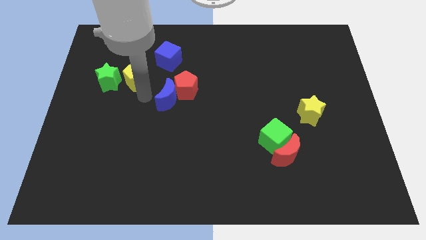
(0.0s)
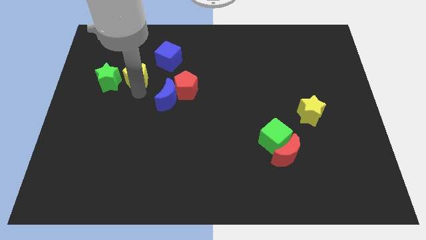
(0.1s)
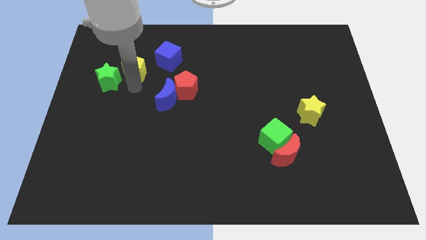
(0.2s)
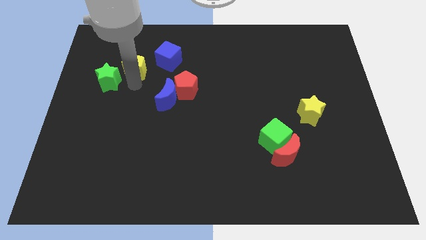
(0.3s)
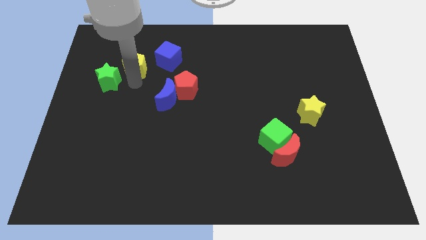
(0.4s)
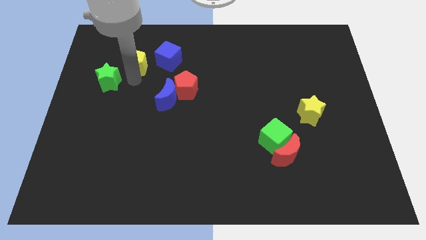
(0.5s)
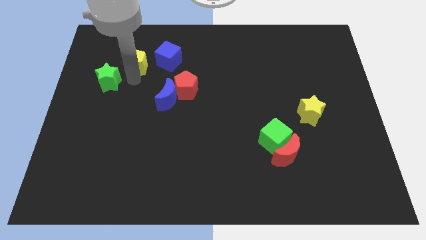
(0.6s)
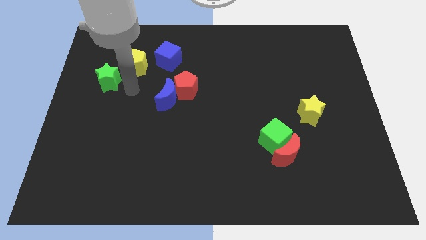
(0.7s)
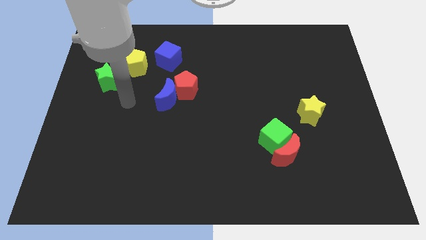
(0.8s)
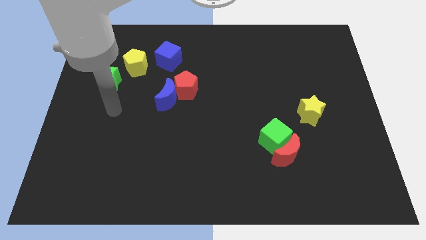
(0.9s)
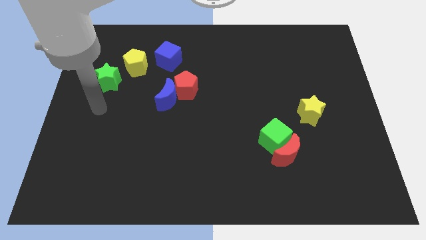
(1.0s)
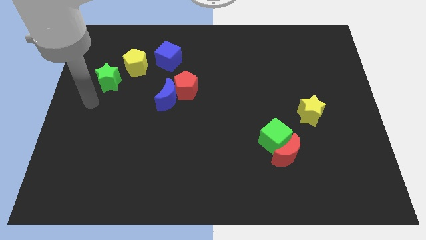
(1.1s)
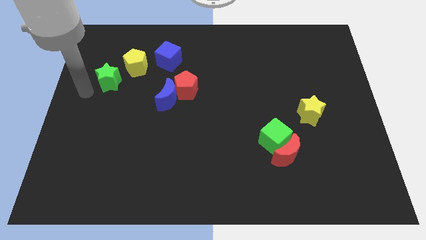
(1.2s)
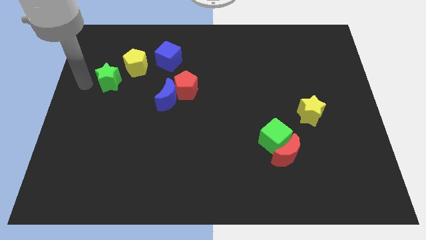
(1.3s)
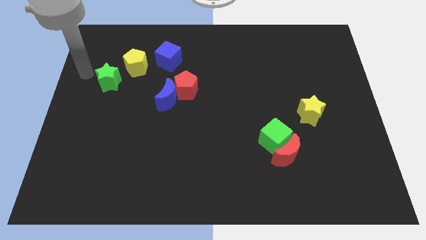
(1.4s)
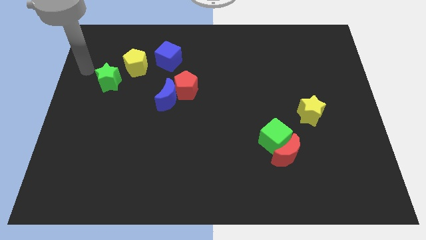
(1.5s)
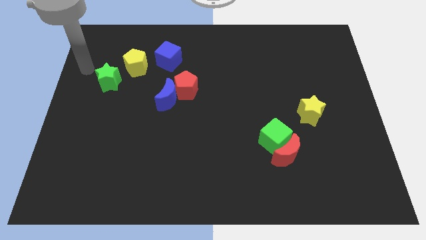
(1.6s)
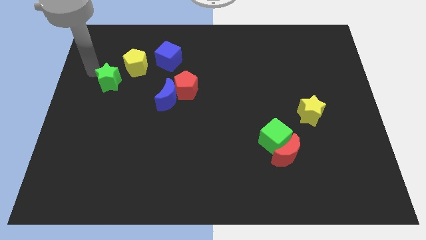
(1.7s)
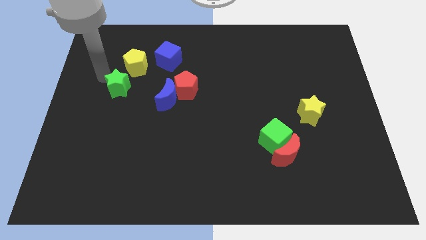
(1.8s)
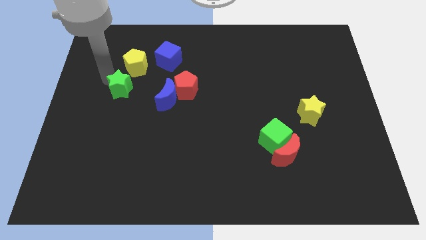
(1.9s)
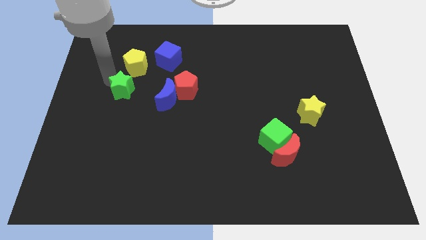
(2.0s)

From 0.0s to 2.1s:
slightly push the yellow pentagon

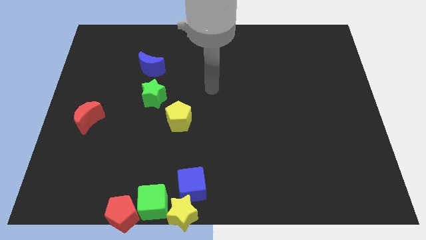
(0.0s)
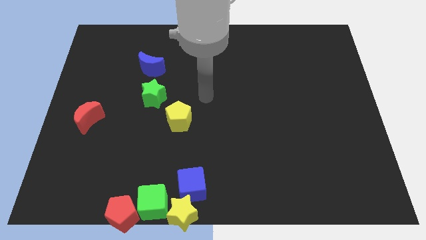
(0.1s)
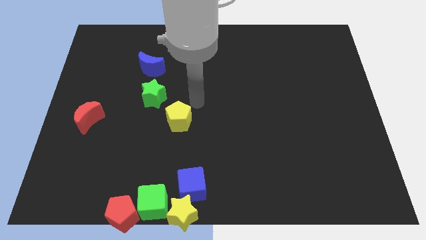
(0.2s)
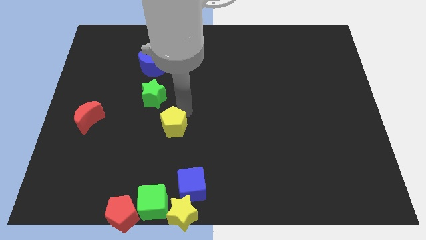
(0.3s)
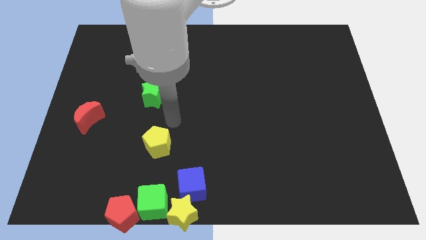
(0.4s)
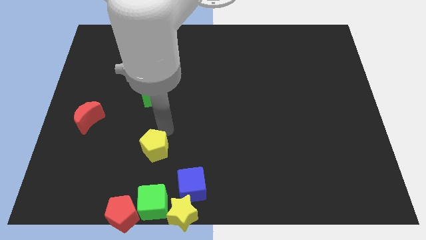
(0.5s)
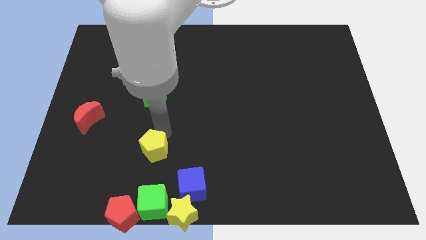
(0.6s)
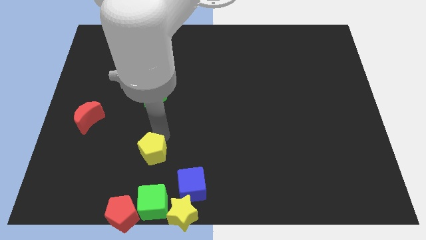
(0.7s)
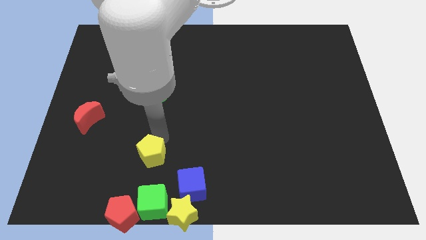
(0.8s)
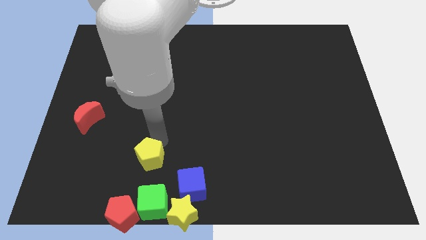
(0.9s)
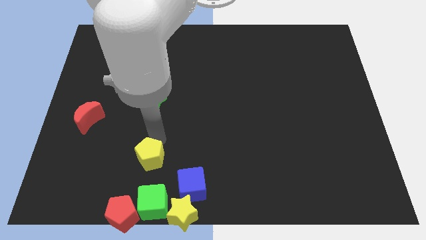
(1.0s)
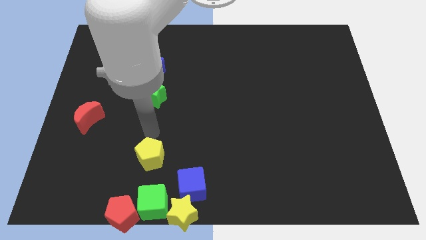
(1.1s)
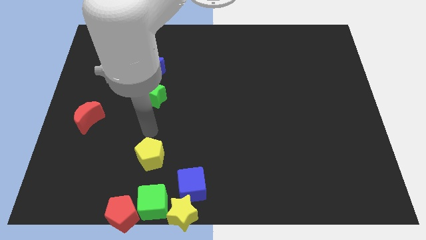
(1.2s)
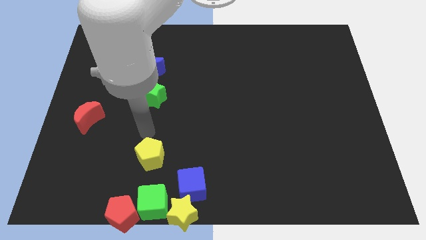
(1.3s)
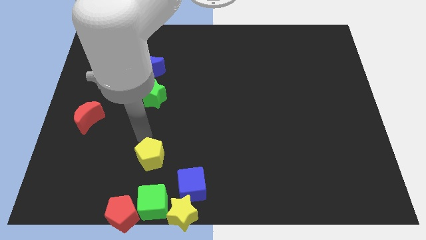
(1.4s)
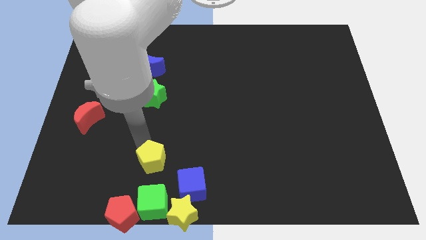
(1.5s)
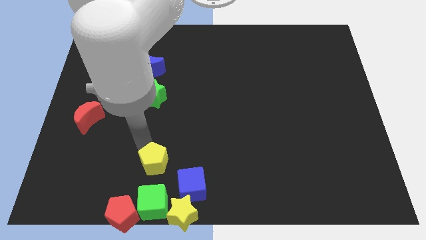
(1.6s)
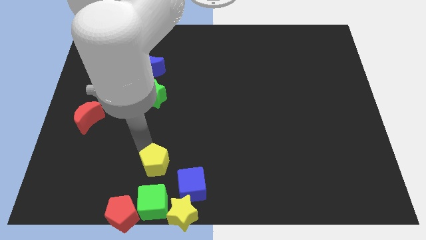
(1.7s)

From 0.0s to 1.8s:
move the yellow pentagon to the top of the green cube

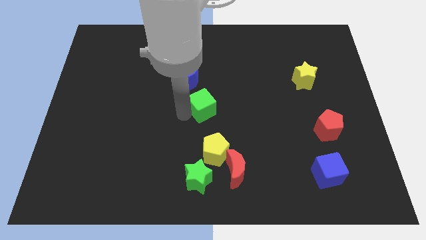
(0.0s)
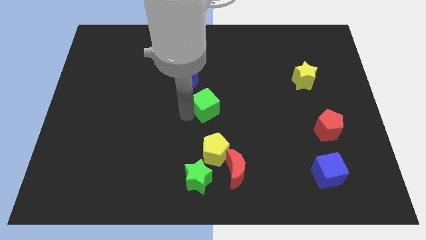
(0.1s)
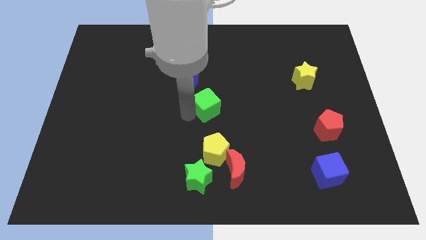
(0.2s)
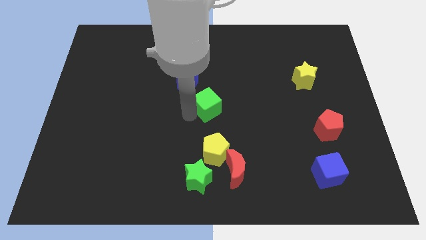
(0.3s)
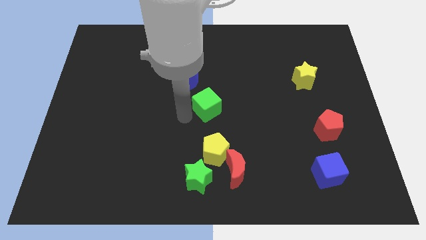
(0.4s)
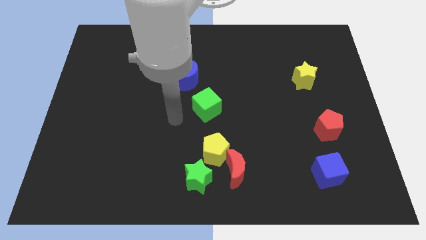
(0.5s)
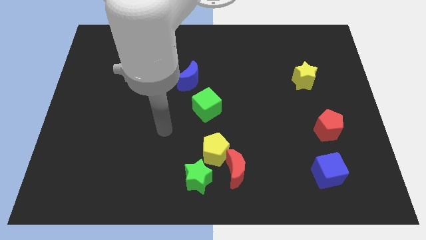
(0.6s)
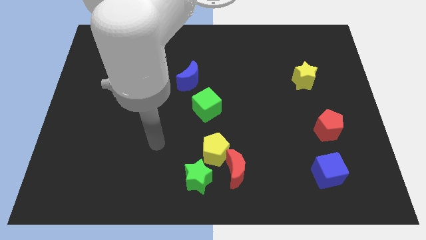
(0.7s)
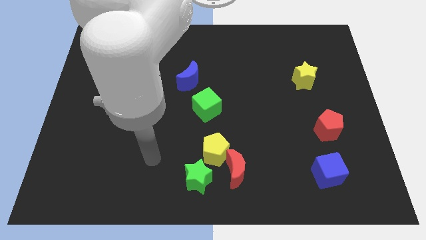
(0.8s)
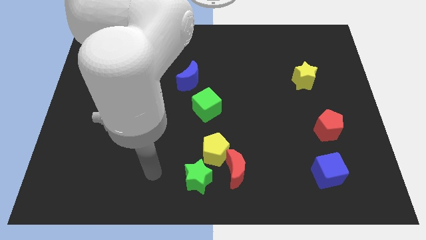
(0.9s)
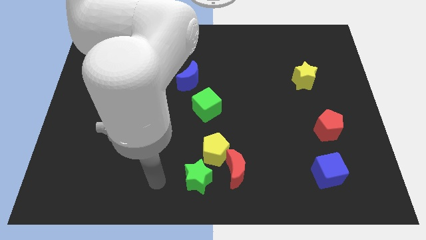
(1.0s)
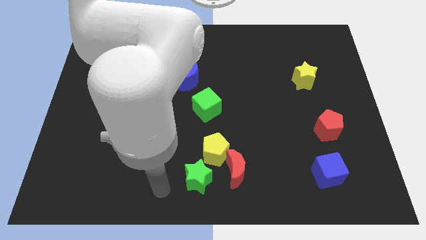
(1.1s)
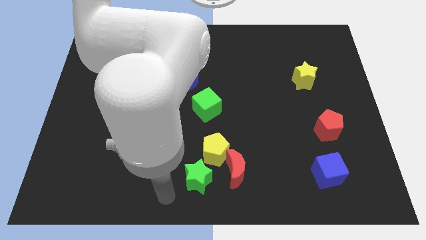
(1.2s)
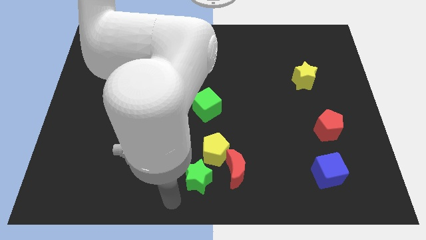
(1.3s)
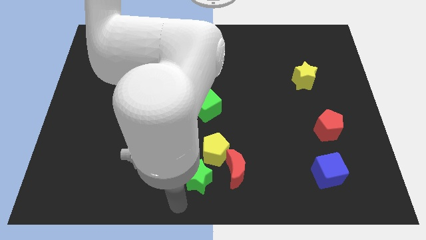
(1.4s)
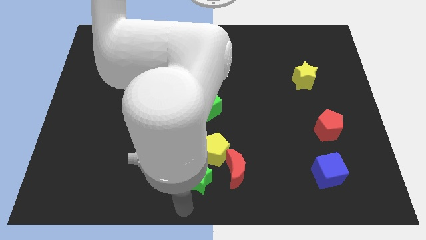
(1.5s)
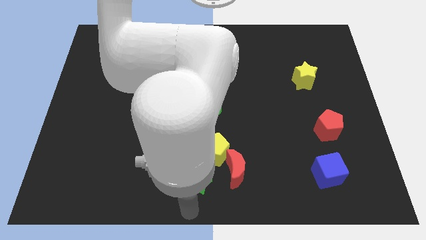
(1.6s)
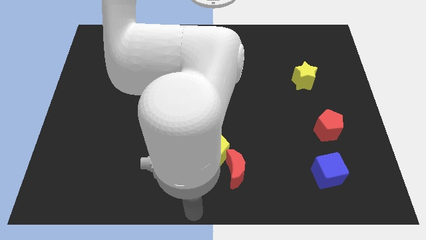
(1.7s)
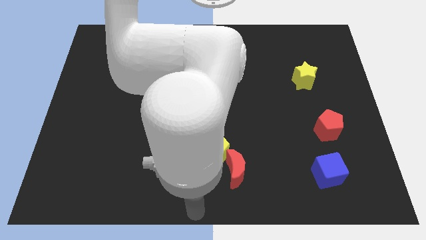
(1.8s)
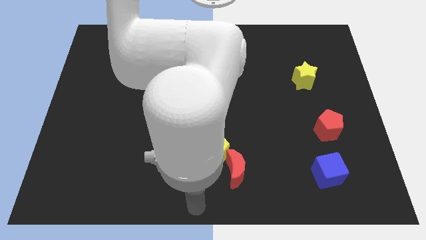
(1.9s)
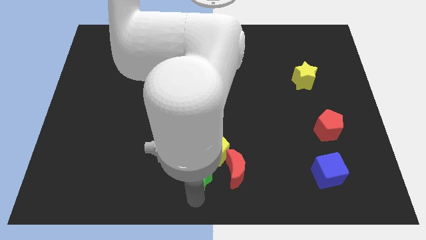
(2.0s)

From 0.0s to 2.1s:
move your arm away from the green cube

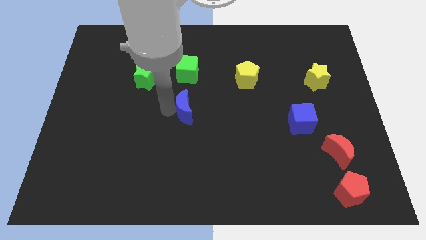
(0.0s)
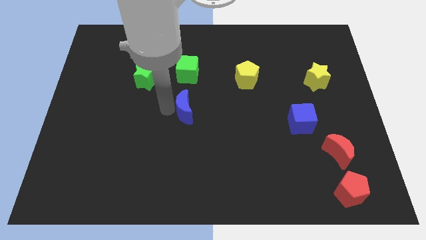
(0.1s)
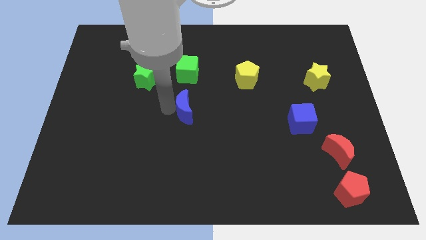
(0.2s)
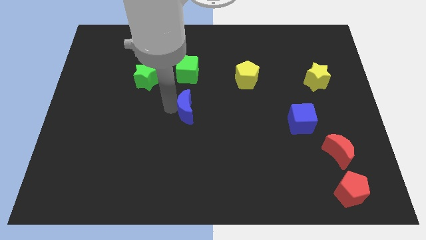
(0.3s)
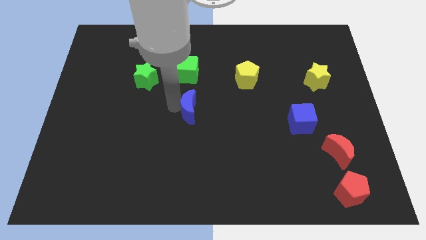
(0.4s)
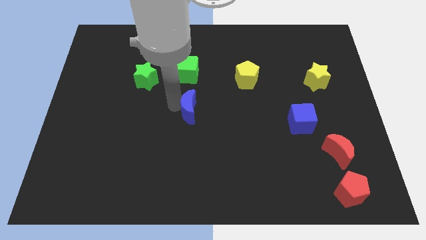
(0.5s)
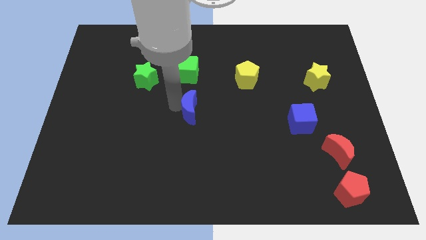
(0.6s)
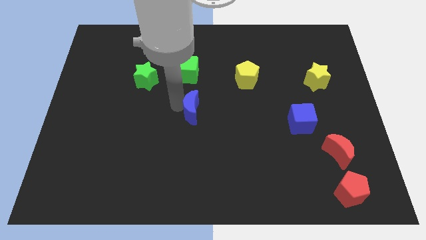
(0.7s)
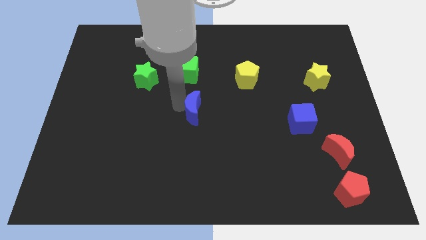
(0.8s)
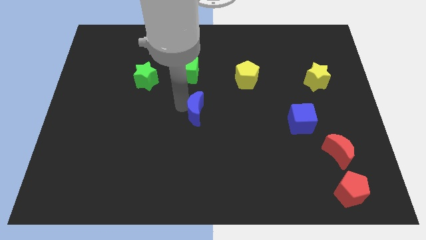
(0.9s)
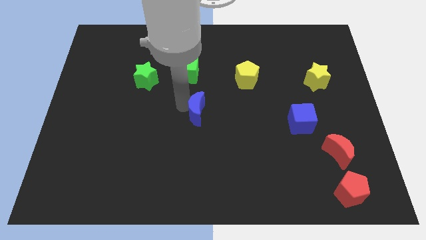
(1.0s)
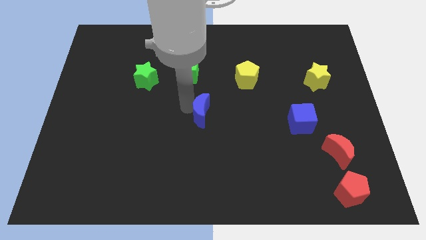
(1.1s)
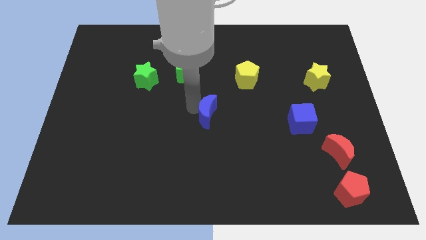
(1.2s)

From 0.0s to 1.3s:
place the blue crescent diagonally at the bottom left of the yellow pentagon

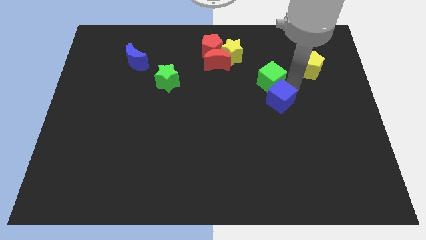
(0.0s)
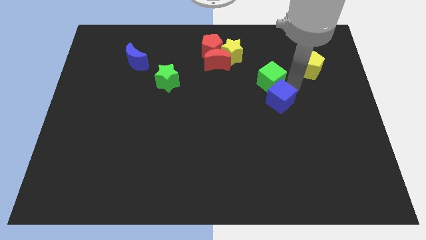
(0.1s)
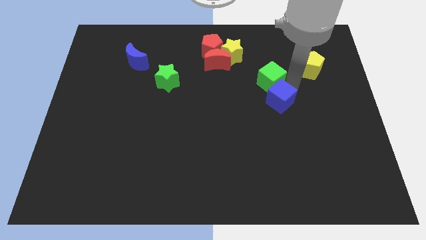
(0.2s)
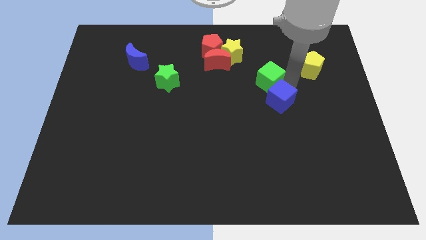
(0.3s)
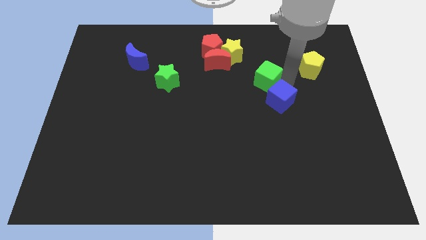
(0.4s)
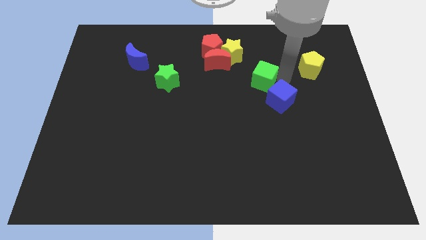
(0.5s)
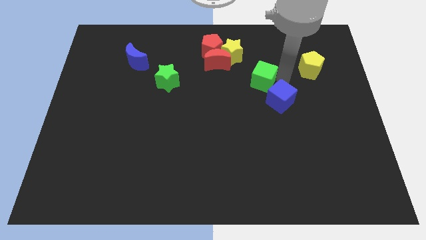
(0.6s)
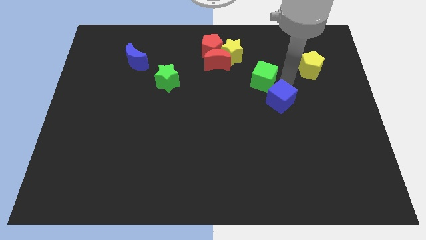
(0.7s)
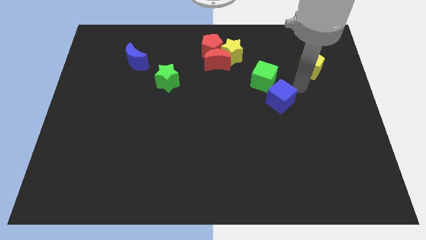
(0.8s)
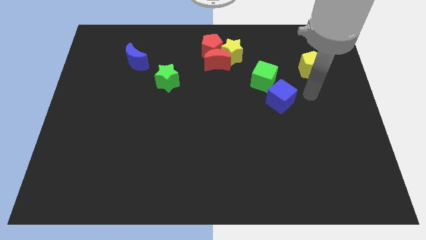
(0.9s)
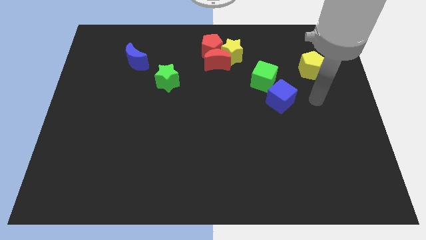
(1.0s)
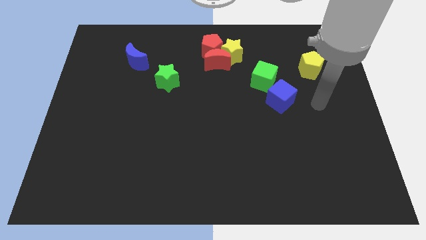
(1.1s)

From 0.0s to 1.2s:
separate the green cube from blue cube

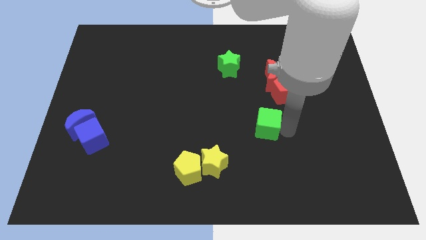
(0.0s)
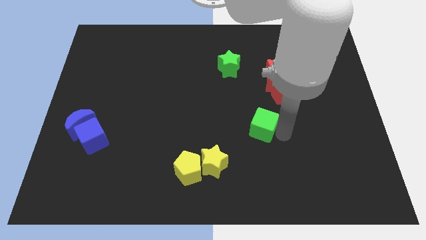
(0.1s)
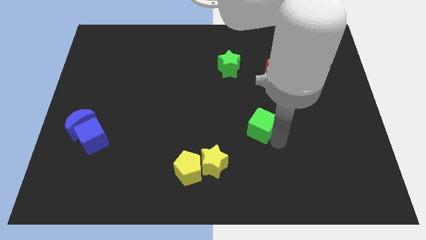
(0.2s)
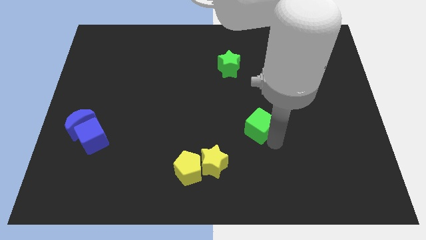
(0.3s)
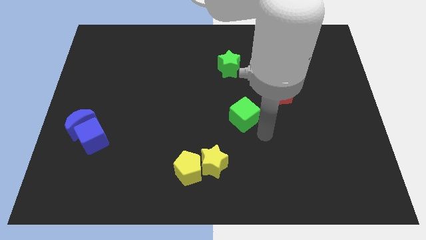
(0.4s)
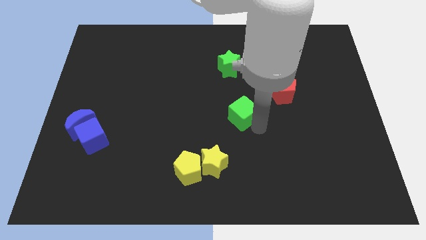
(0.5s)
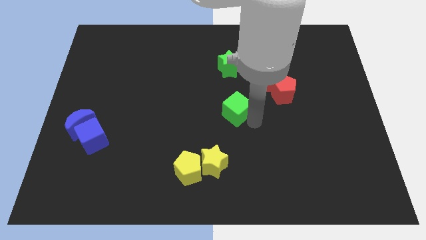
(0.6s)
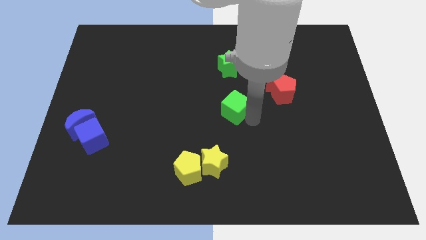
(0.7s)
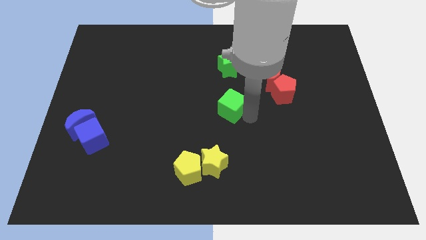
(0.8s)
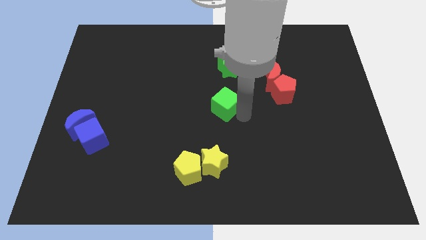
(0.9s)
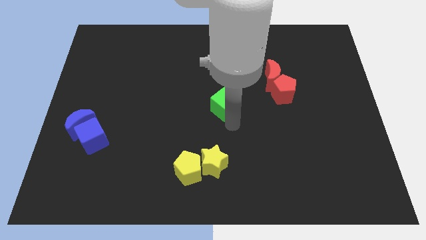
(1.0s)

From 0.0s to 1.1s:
push the green cube to the bottom of the green star
